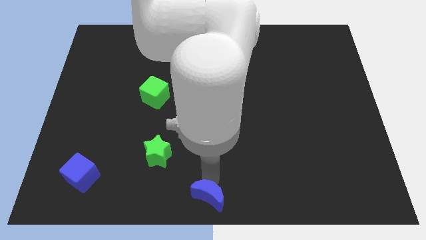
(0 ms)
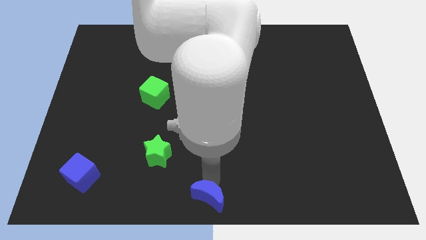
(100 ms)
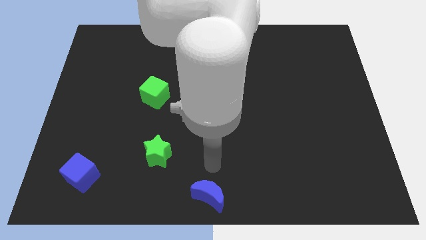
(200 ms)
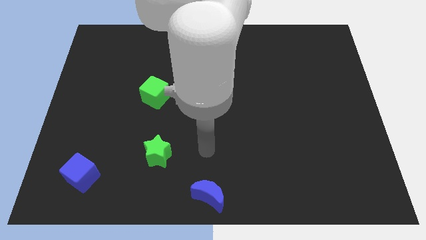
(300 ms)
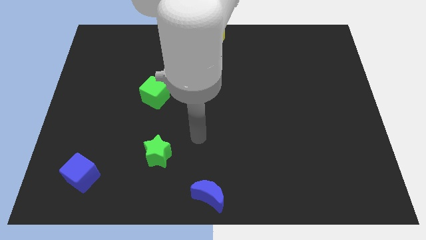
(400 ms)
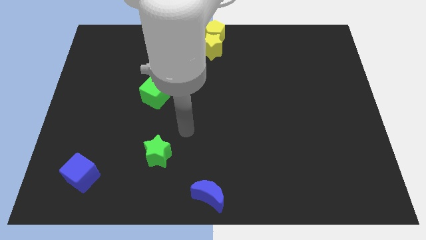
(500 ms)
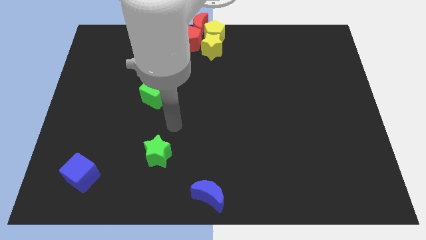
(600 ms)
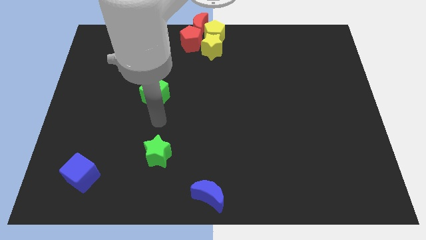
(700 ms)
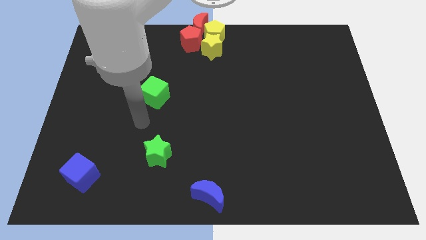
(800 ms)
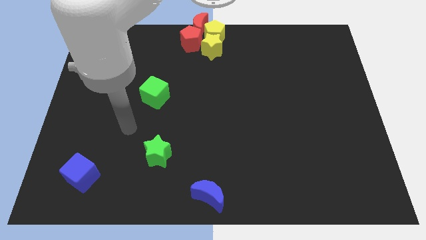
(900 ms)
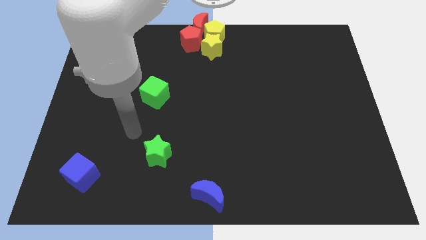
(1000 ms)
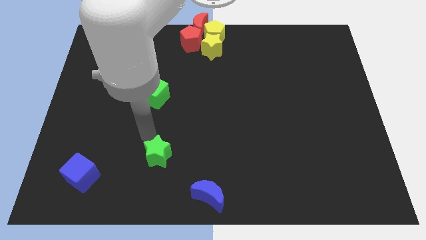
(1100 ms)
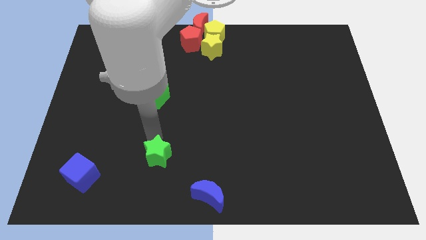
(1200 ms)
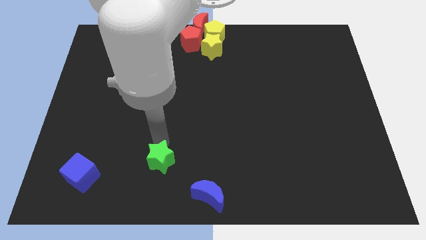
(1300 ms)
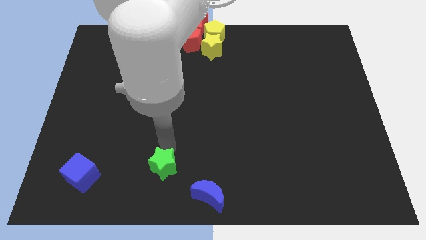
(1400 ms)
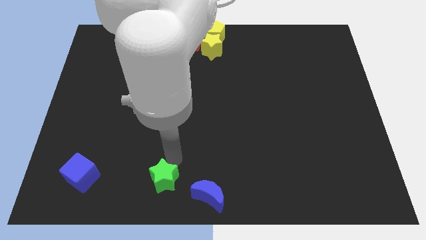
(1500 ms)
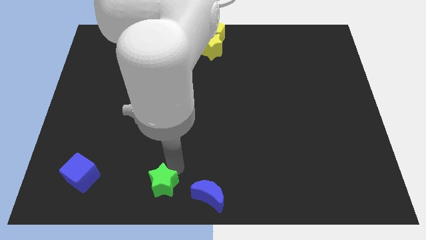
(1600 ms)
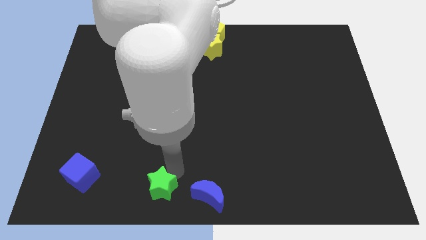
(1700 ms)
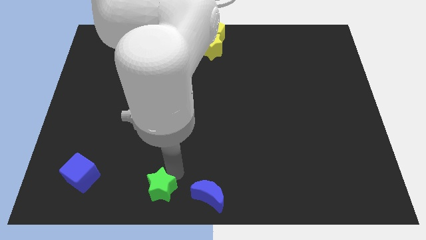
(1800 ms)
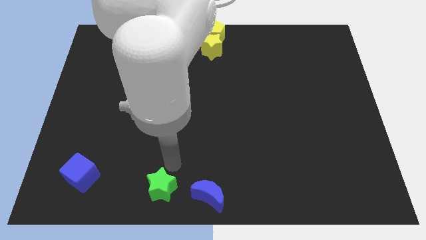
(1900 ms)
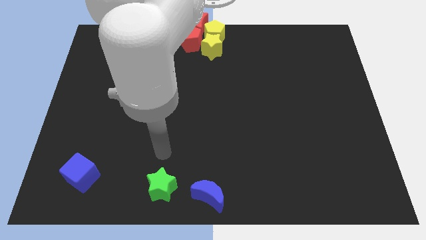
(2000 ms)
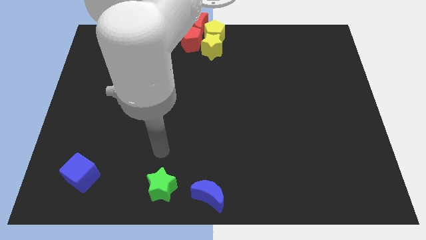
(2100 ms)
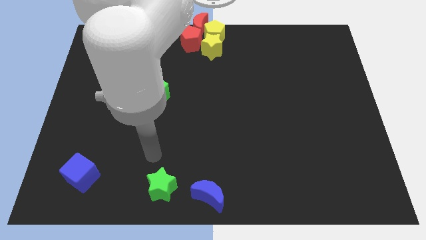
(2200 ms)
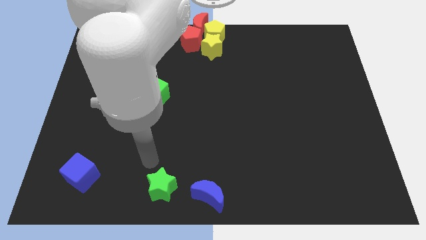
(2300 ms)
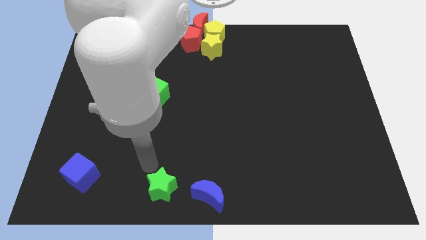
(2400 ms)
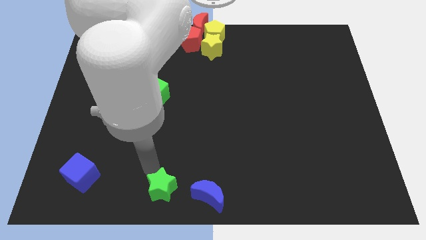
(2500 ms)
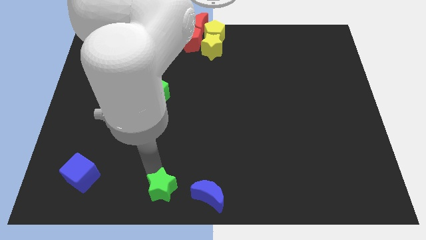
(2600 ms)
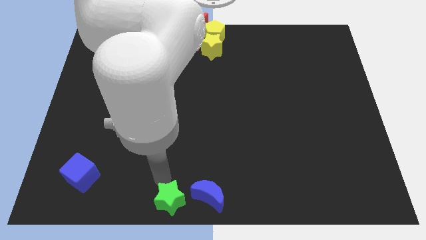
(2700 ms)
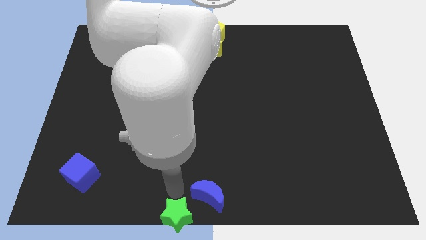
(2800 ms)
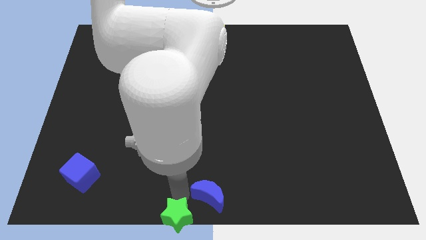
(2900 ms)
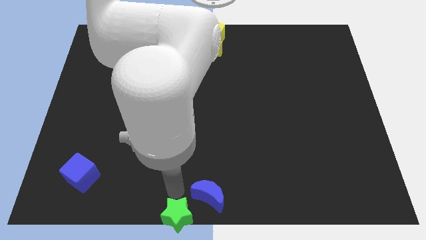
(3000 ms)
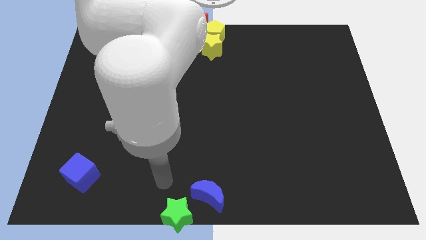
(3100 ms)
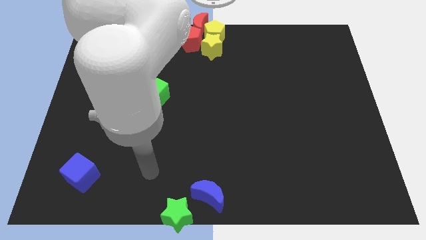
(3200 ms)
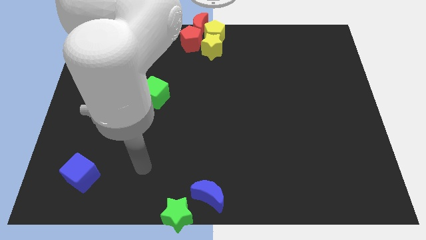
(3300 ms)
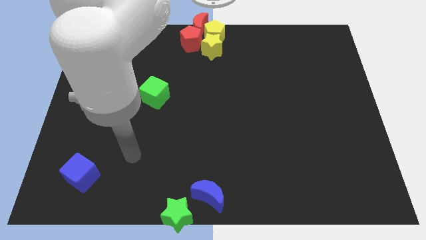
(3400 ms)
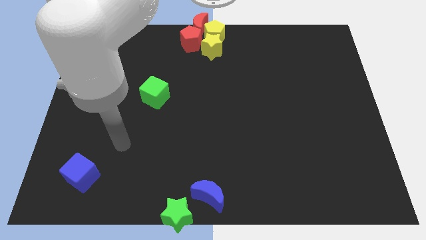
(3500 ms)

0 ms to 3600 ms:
push the green star to the bottom middle of the board

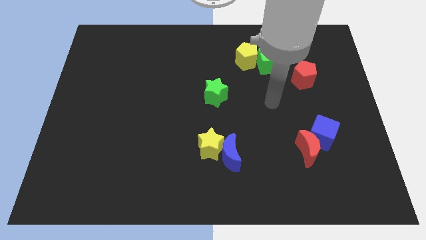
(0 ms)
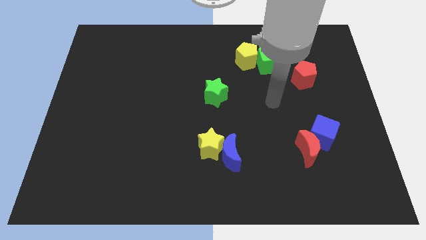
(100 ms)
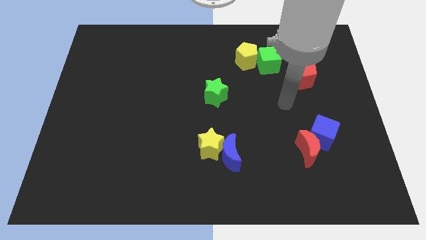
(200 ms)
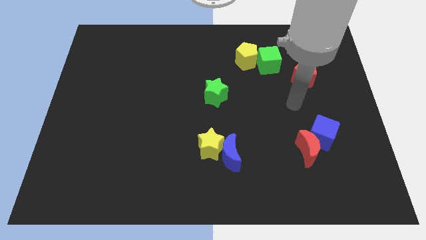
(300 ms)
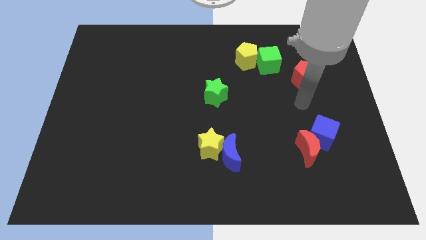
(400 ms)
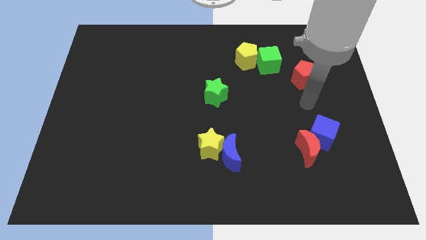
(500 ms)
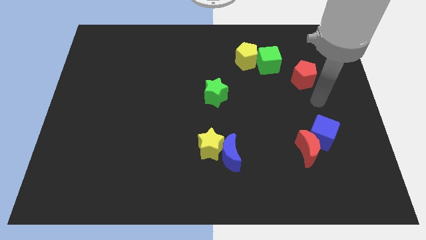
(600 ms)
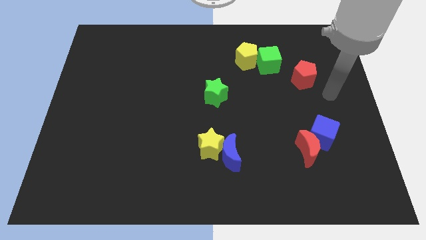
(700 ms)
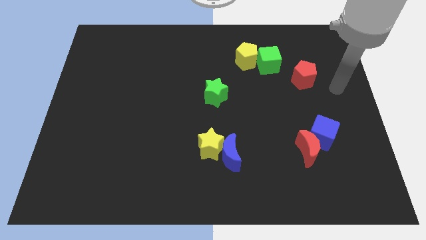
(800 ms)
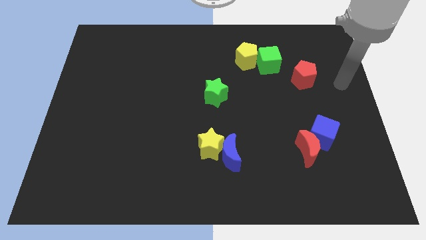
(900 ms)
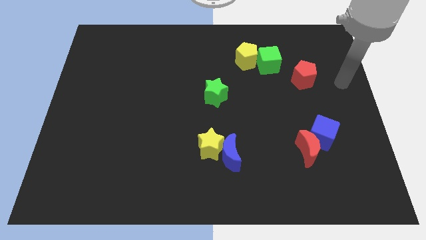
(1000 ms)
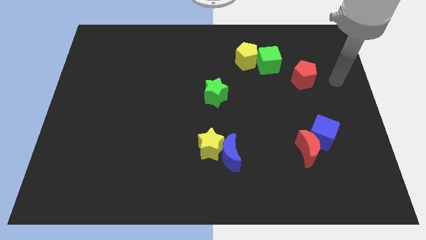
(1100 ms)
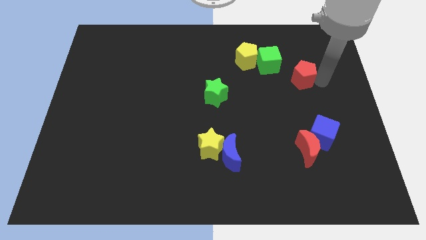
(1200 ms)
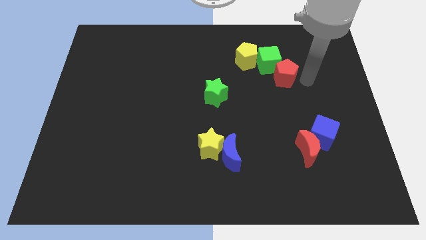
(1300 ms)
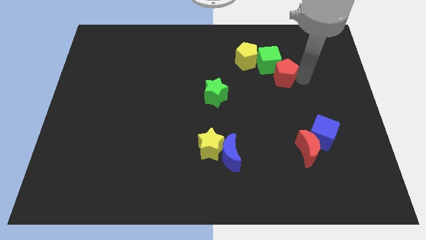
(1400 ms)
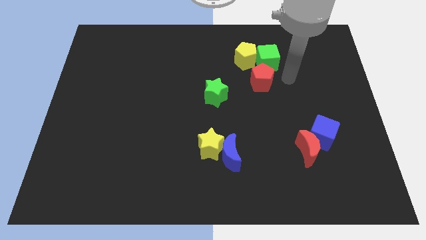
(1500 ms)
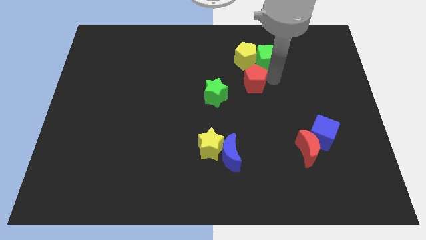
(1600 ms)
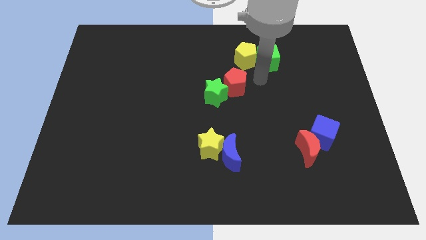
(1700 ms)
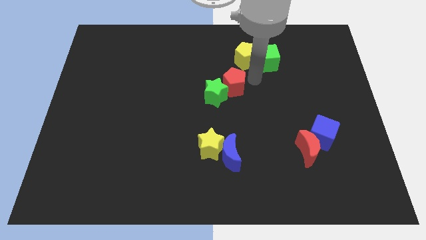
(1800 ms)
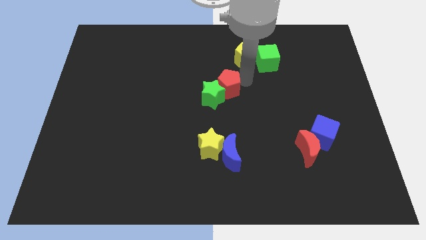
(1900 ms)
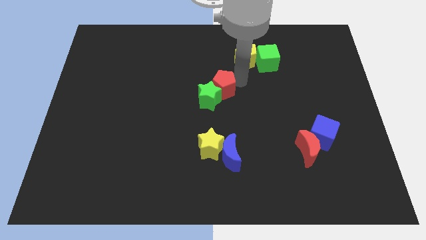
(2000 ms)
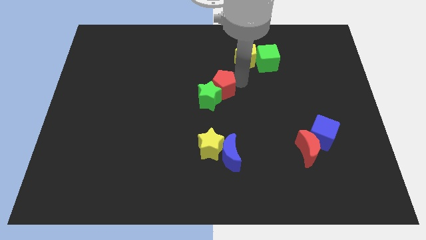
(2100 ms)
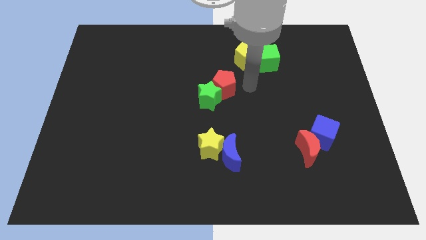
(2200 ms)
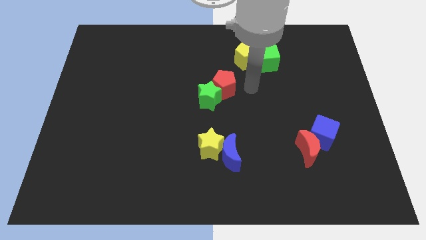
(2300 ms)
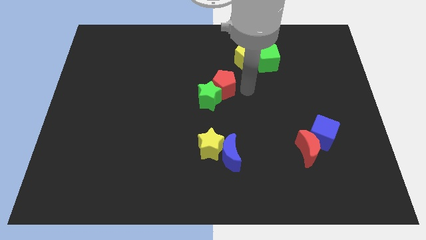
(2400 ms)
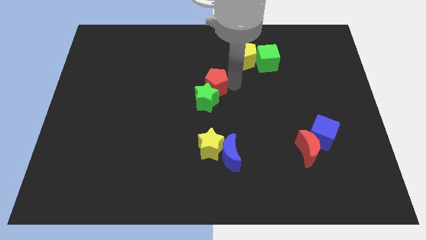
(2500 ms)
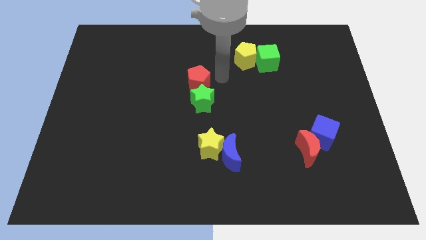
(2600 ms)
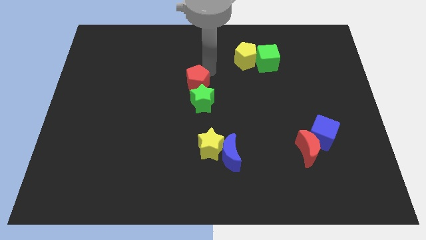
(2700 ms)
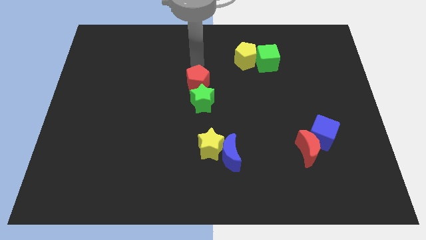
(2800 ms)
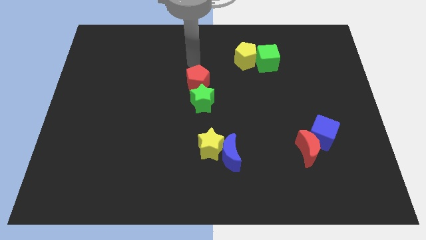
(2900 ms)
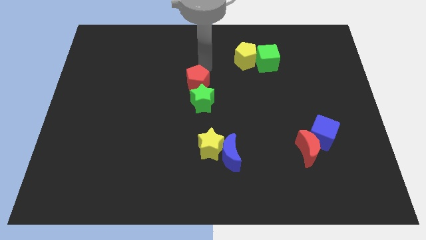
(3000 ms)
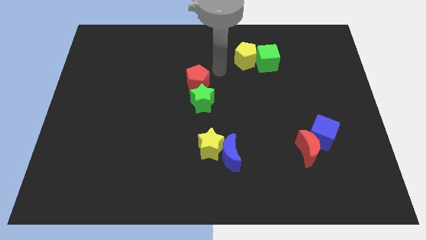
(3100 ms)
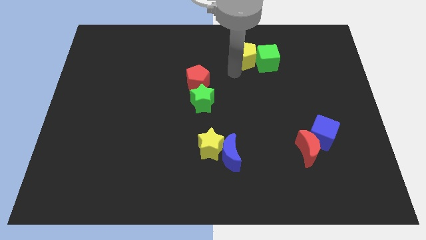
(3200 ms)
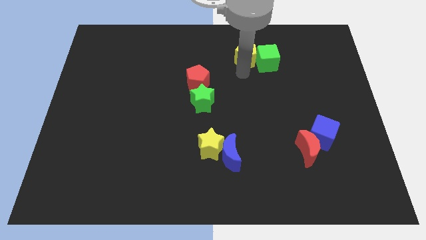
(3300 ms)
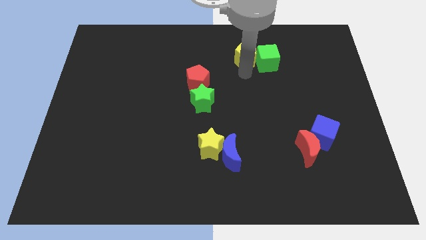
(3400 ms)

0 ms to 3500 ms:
push the red pentagon into the green star

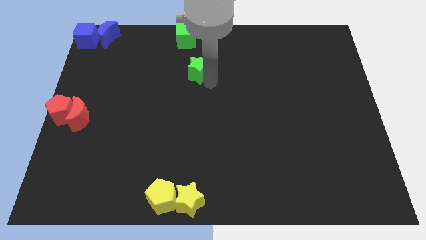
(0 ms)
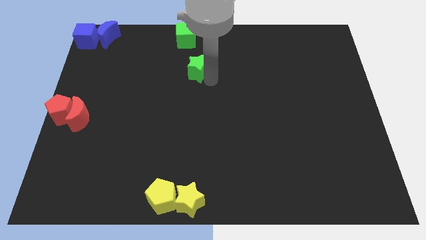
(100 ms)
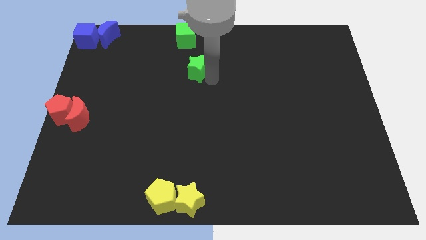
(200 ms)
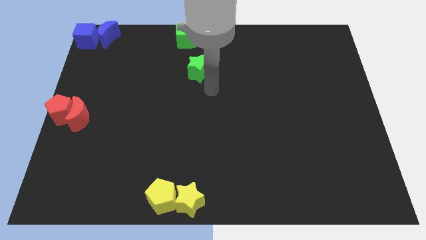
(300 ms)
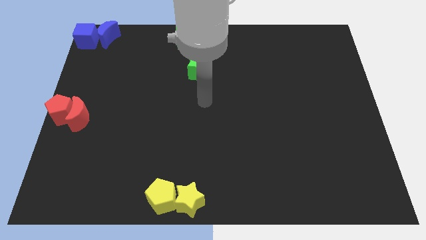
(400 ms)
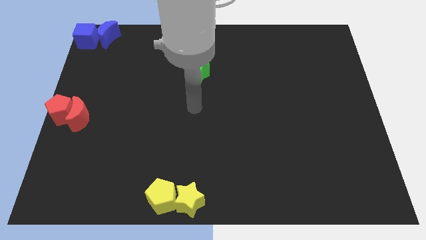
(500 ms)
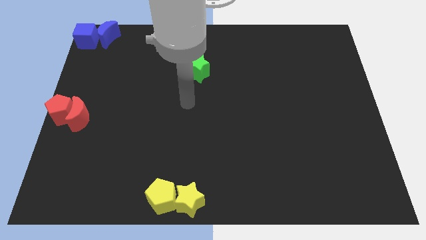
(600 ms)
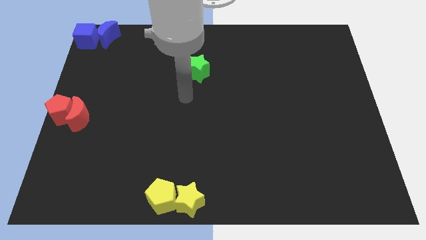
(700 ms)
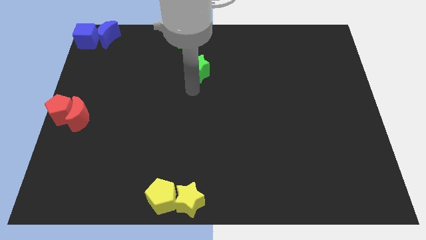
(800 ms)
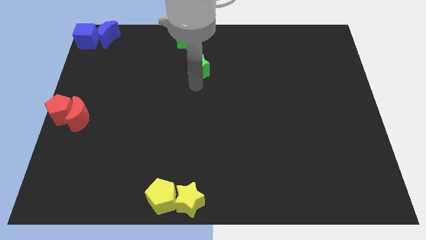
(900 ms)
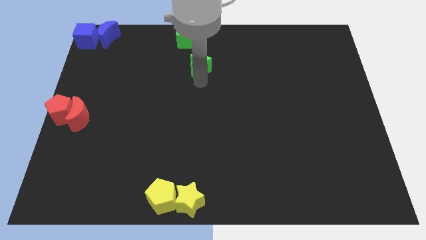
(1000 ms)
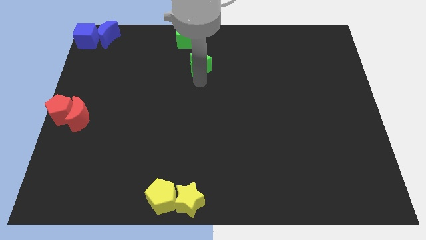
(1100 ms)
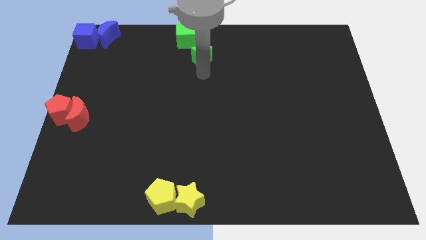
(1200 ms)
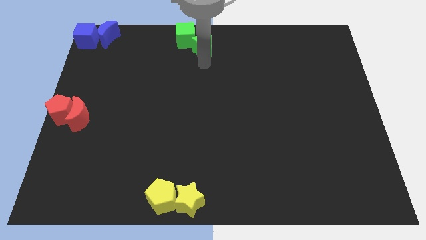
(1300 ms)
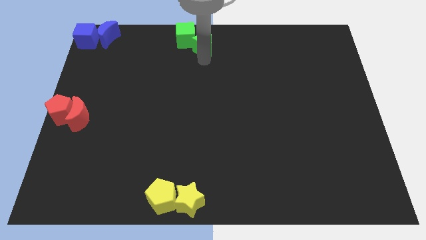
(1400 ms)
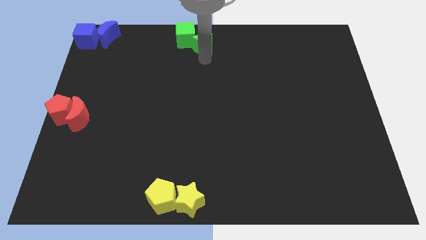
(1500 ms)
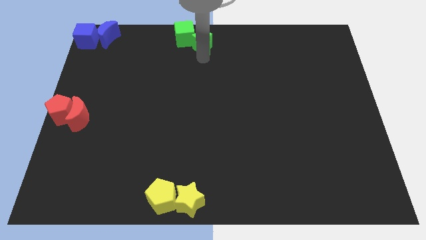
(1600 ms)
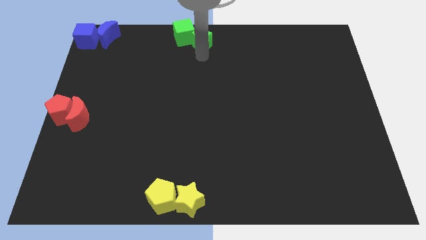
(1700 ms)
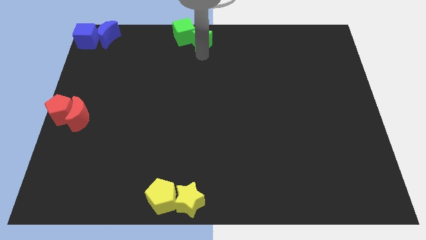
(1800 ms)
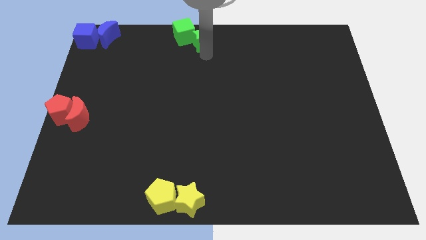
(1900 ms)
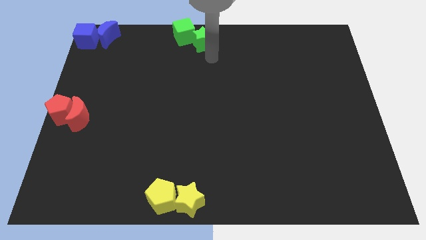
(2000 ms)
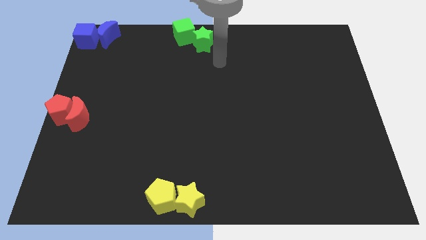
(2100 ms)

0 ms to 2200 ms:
push the green star into the green cube
